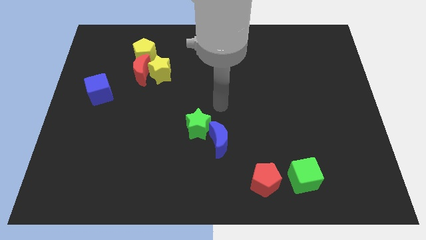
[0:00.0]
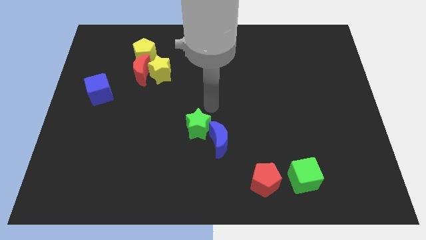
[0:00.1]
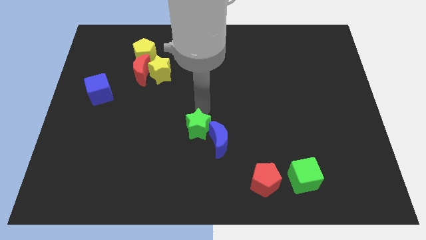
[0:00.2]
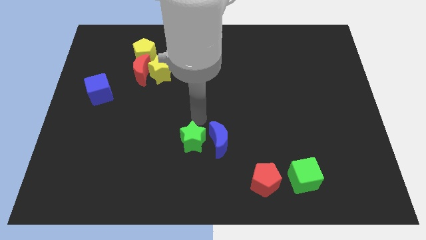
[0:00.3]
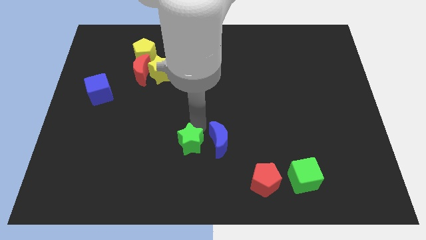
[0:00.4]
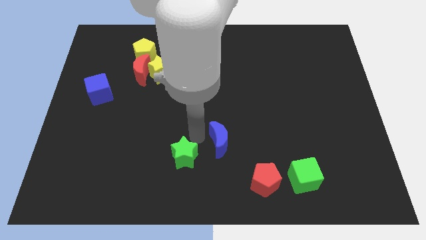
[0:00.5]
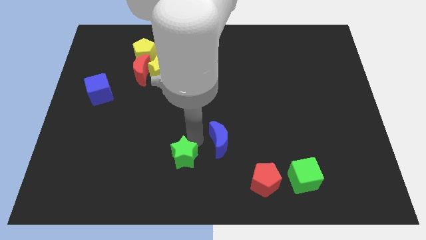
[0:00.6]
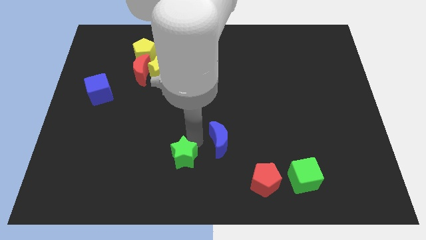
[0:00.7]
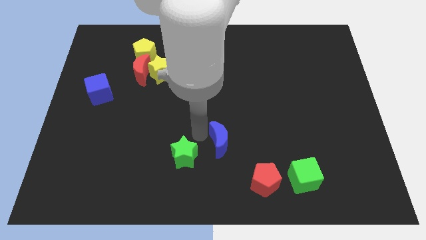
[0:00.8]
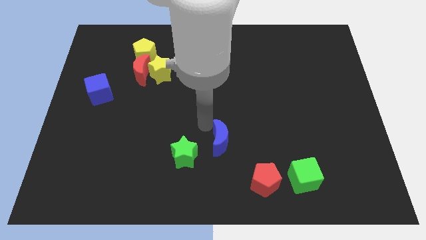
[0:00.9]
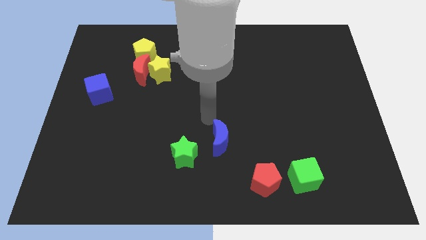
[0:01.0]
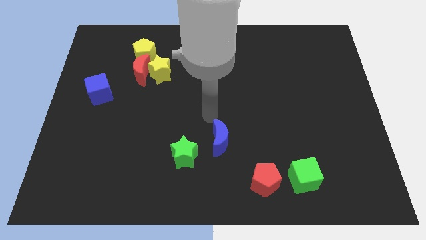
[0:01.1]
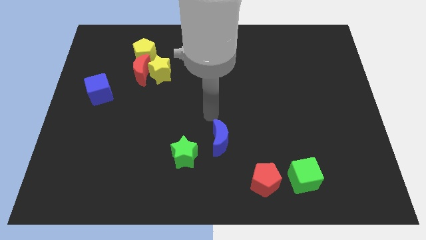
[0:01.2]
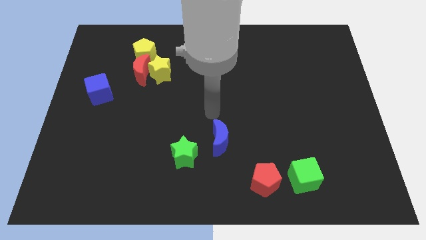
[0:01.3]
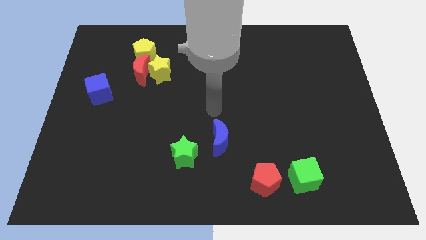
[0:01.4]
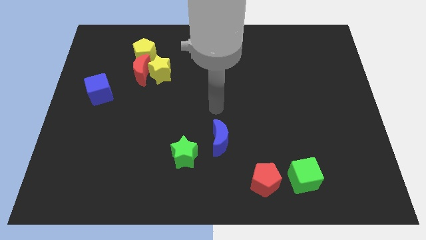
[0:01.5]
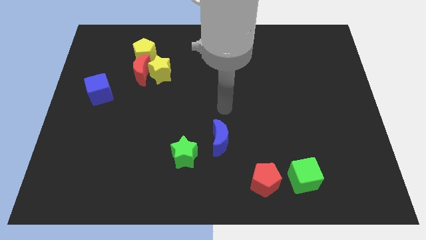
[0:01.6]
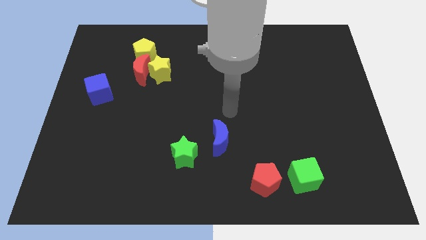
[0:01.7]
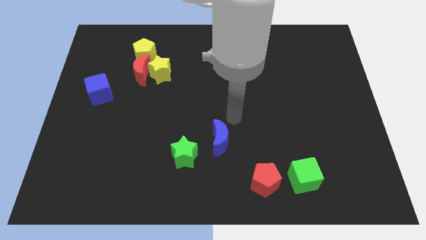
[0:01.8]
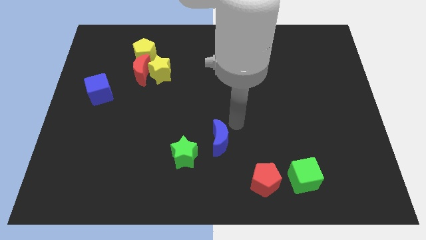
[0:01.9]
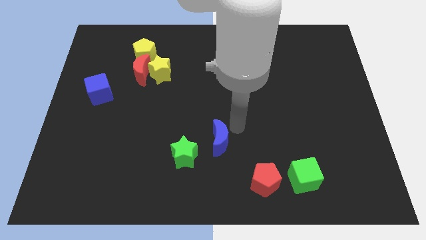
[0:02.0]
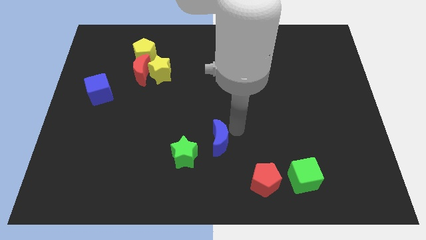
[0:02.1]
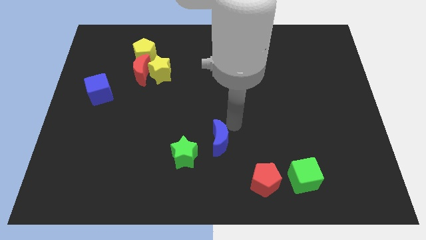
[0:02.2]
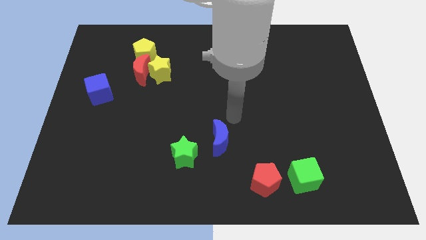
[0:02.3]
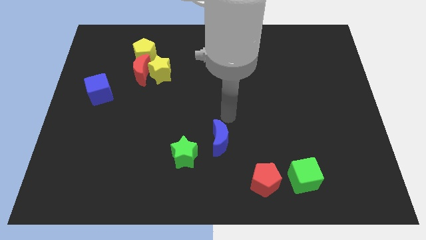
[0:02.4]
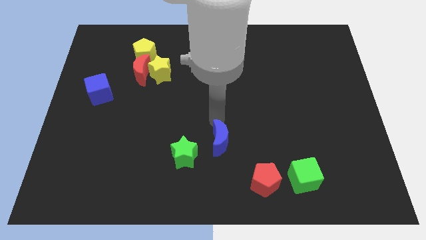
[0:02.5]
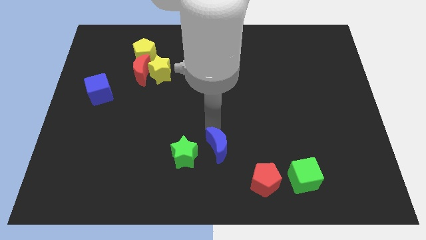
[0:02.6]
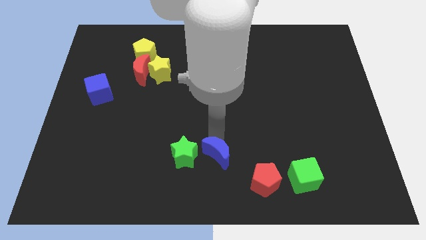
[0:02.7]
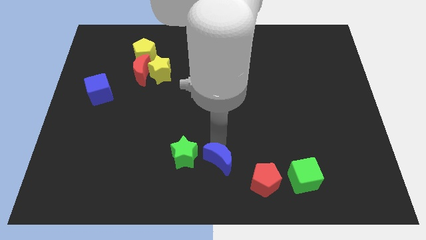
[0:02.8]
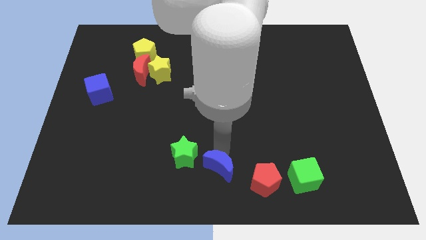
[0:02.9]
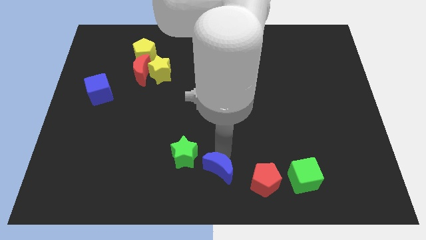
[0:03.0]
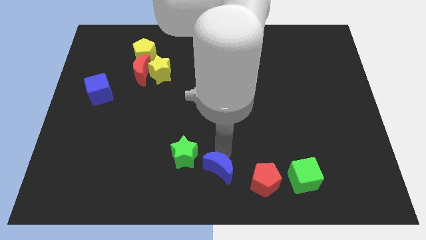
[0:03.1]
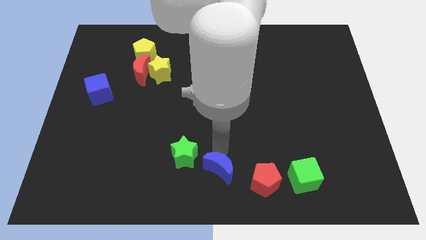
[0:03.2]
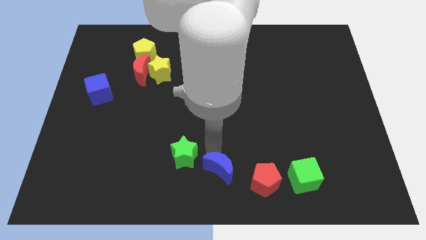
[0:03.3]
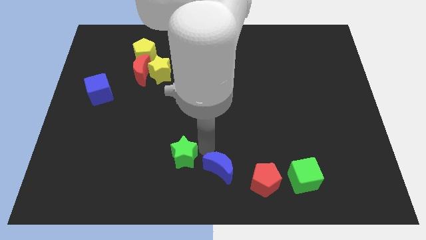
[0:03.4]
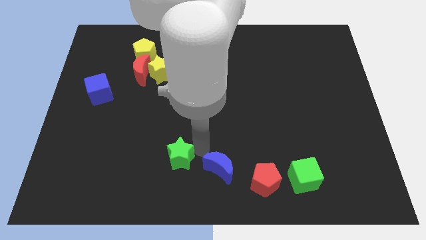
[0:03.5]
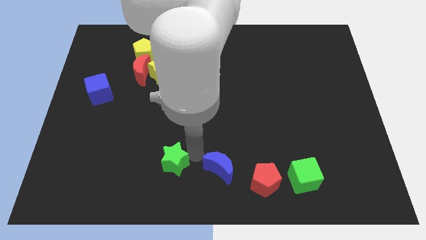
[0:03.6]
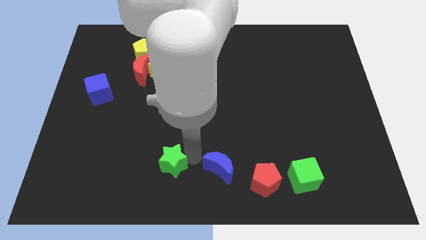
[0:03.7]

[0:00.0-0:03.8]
separate the green star and blue moon from each others

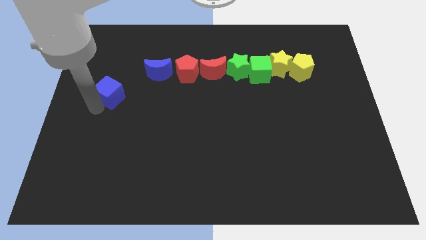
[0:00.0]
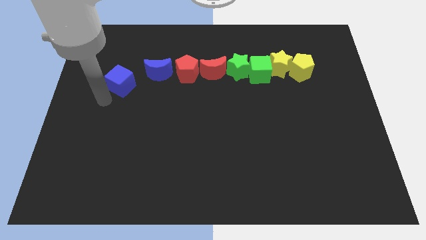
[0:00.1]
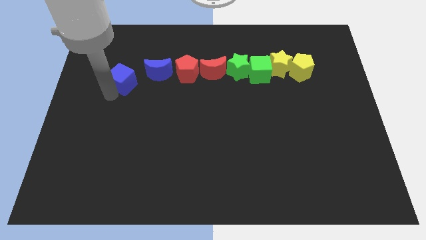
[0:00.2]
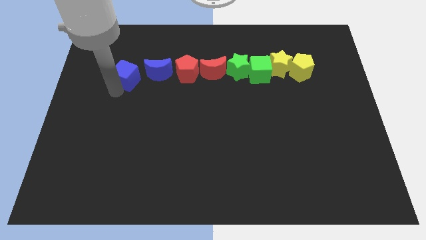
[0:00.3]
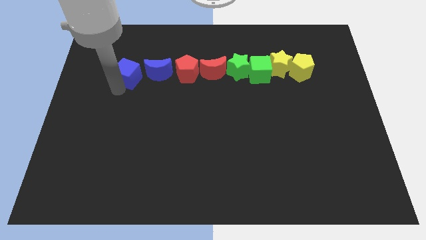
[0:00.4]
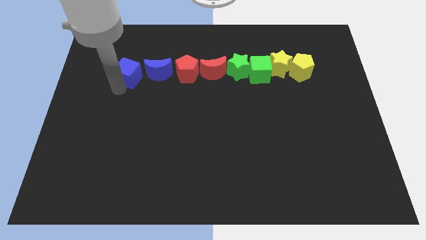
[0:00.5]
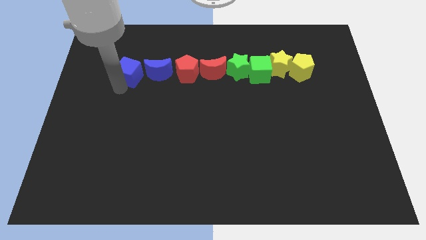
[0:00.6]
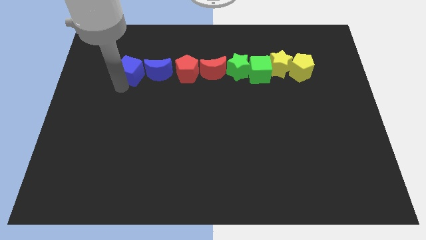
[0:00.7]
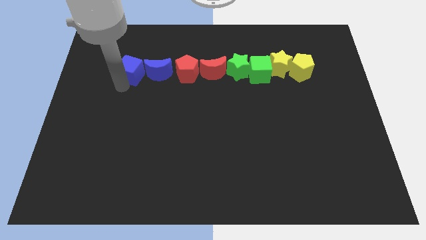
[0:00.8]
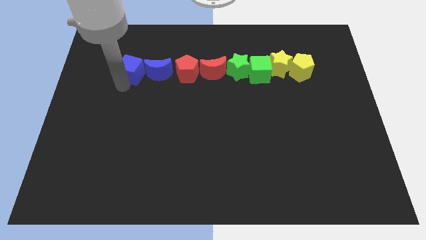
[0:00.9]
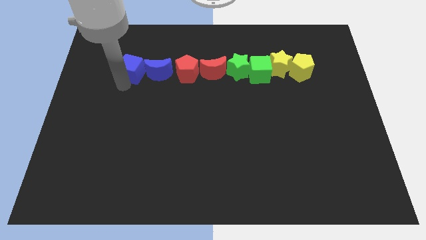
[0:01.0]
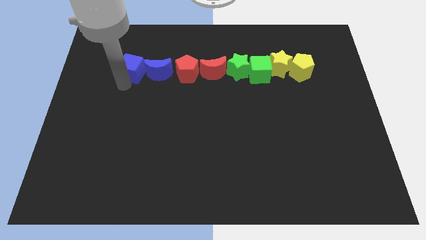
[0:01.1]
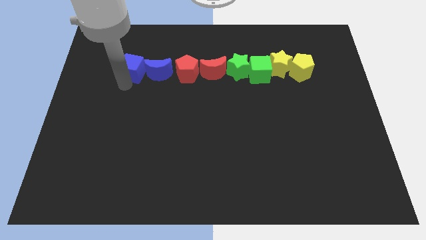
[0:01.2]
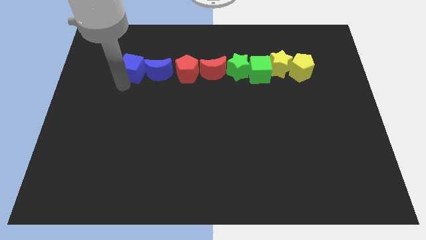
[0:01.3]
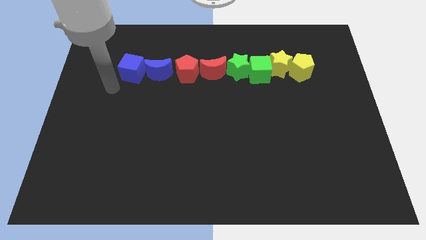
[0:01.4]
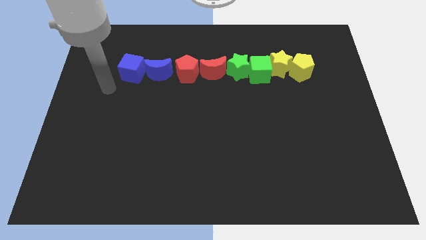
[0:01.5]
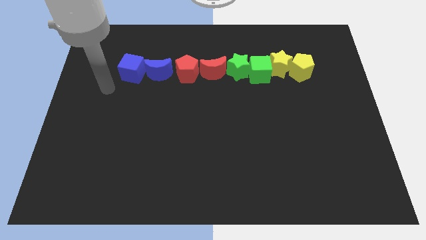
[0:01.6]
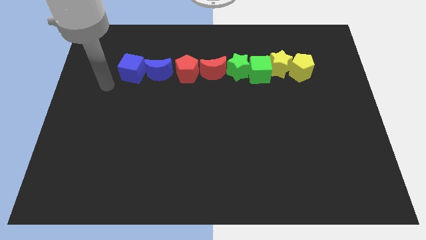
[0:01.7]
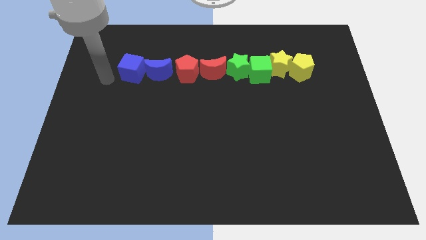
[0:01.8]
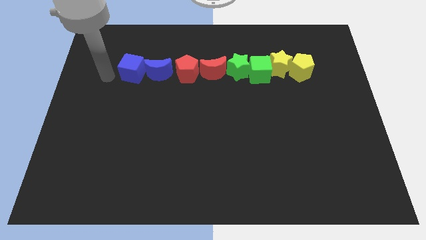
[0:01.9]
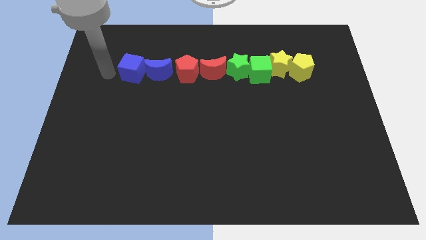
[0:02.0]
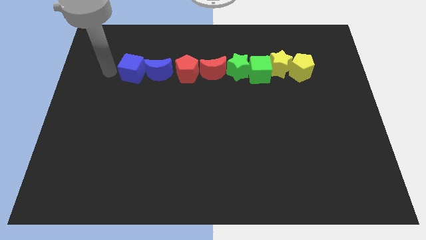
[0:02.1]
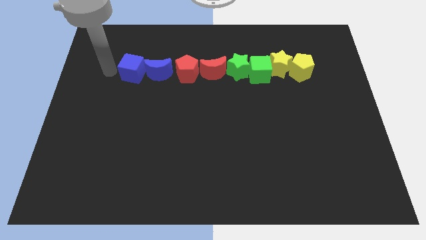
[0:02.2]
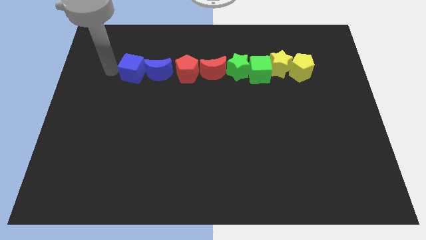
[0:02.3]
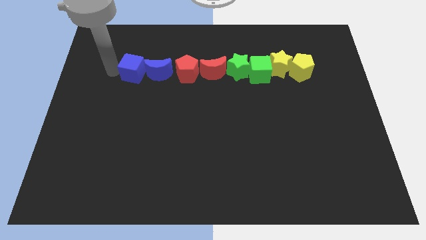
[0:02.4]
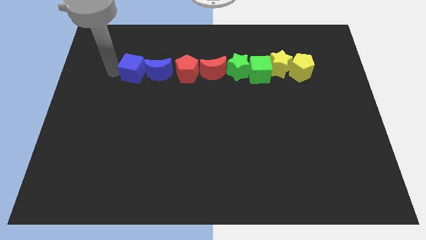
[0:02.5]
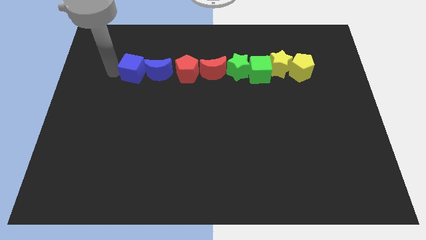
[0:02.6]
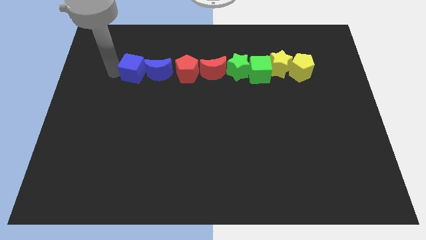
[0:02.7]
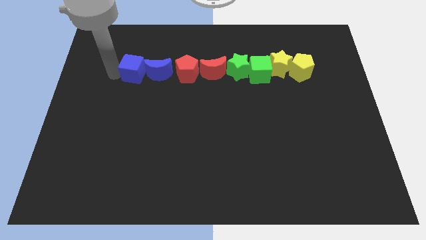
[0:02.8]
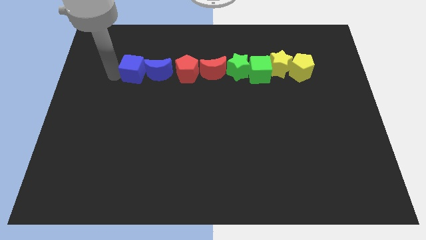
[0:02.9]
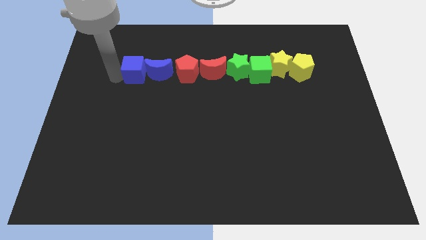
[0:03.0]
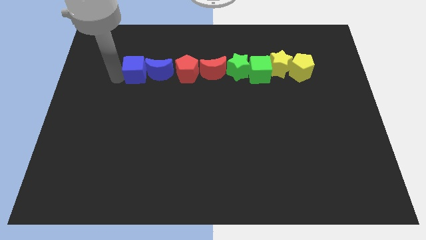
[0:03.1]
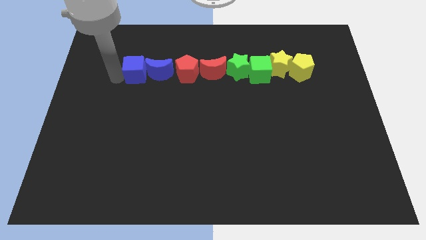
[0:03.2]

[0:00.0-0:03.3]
drag the blue cube into the left side of the blue crescent

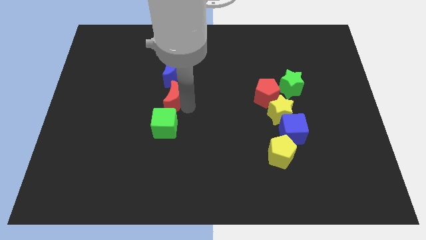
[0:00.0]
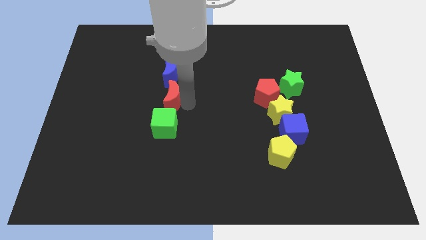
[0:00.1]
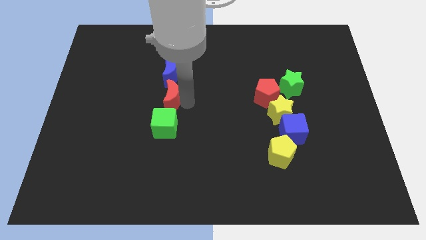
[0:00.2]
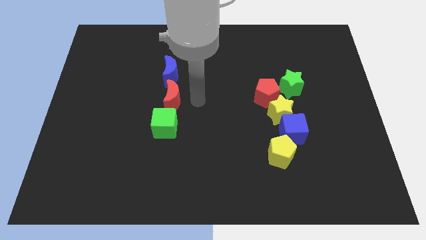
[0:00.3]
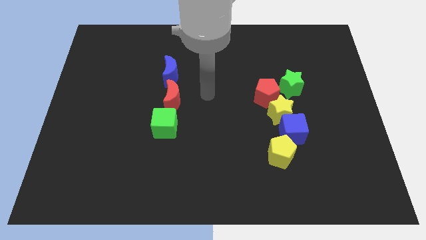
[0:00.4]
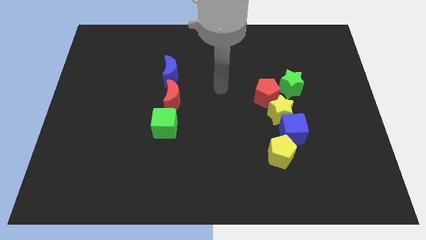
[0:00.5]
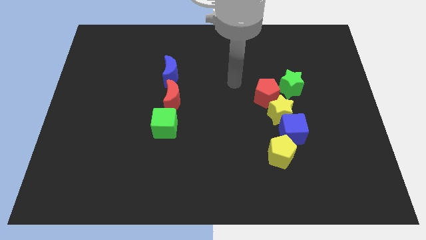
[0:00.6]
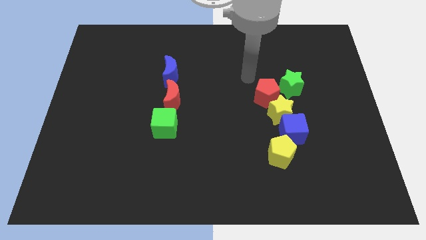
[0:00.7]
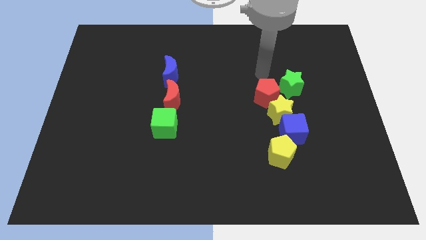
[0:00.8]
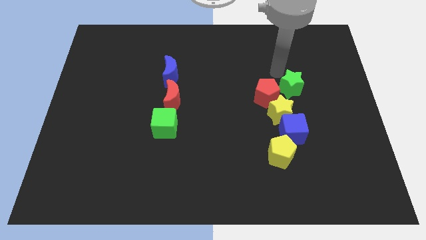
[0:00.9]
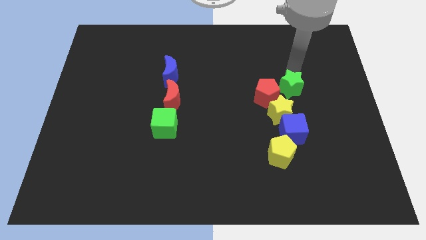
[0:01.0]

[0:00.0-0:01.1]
move the arm away from the red moon

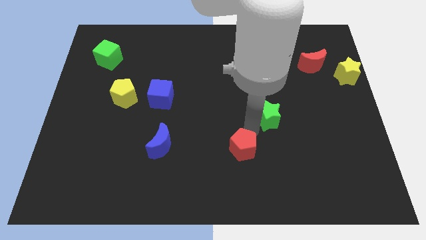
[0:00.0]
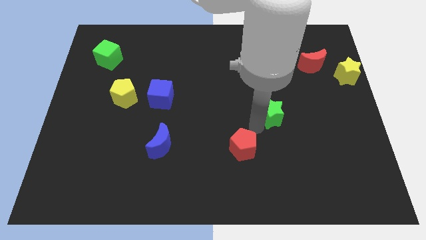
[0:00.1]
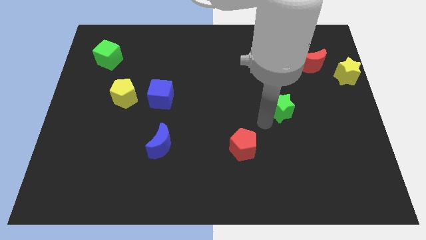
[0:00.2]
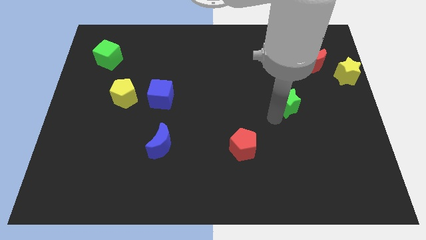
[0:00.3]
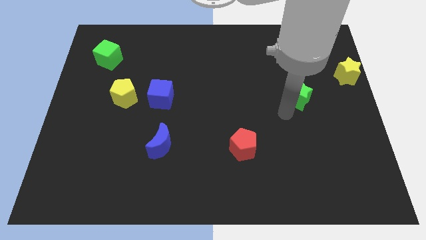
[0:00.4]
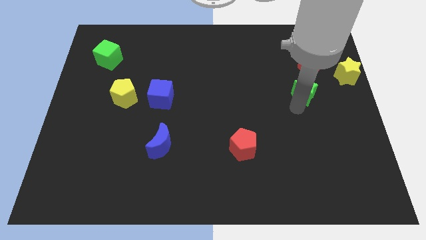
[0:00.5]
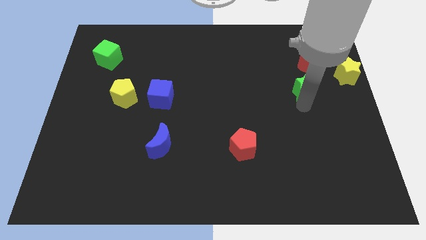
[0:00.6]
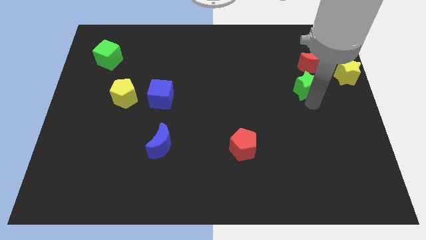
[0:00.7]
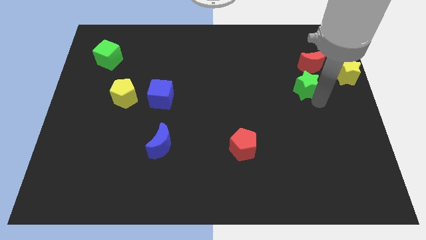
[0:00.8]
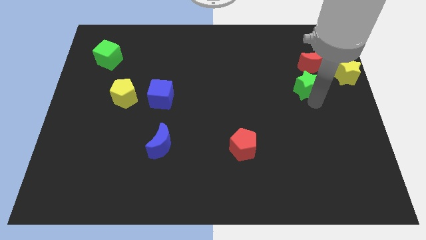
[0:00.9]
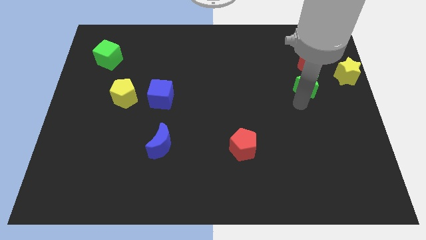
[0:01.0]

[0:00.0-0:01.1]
place green star below red moon
